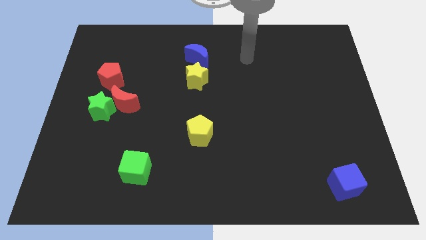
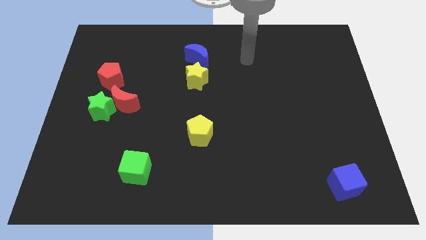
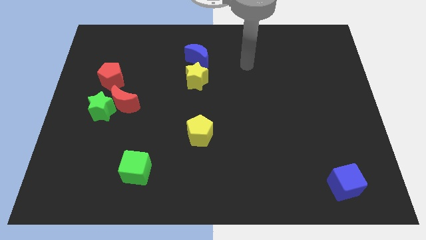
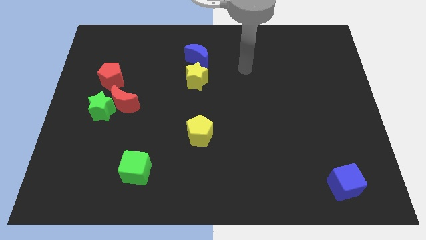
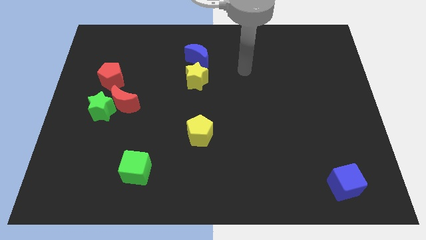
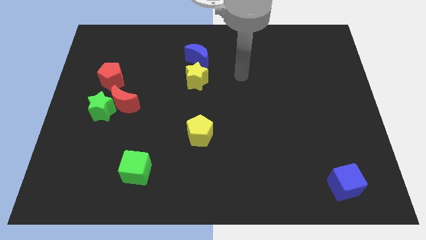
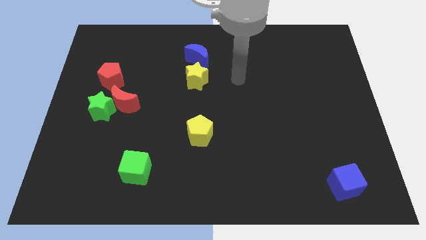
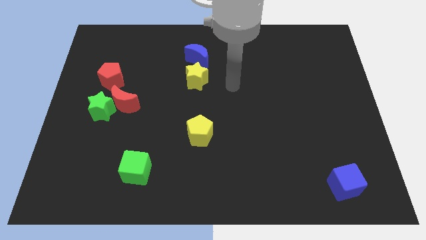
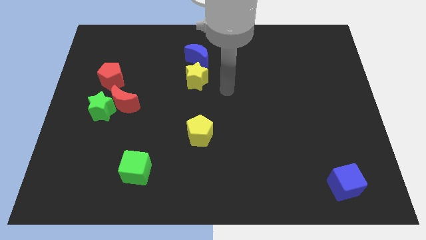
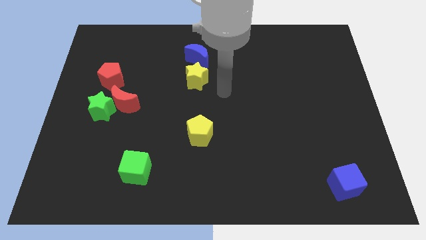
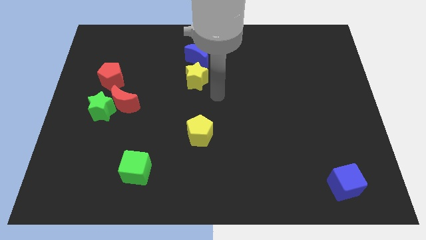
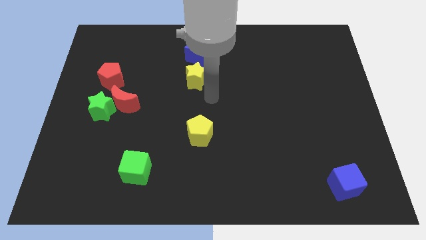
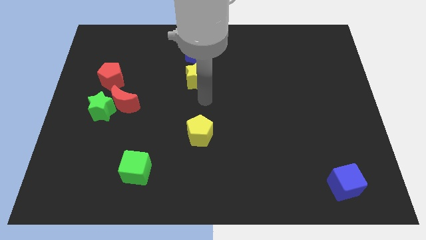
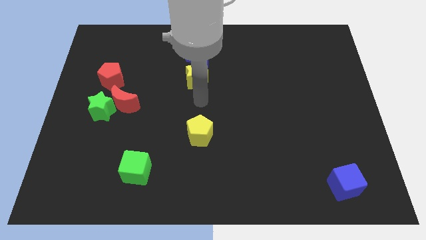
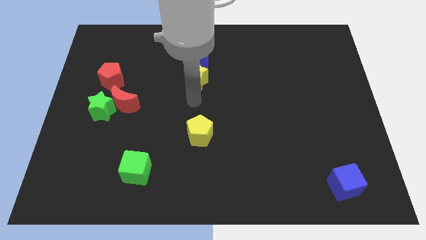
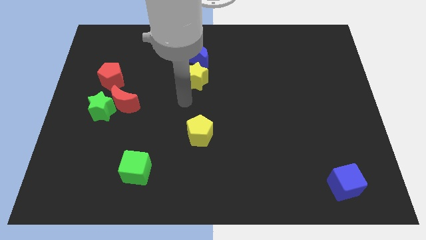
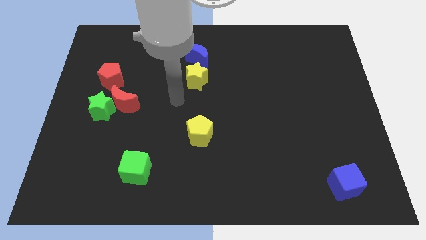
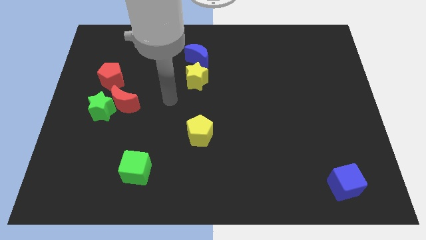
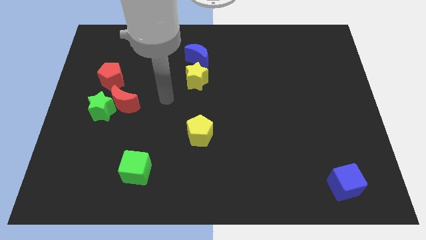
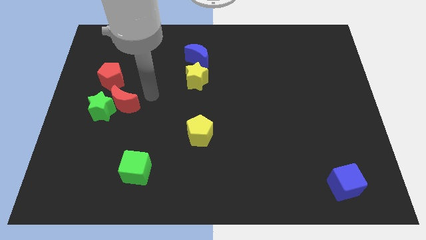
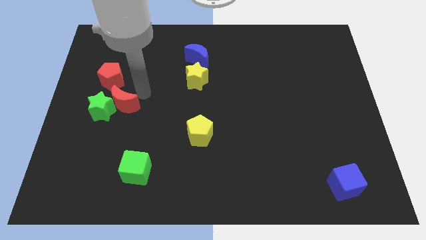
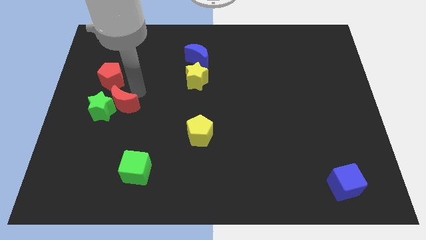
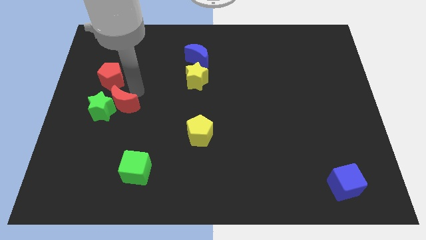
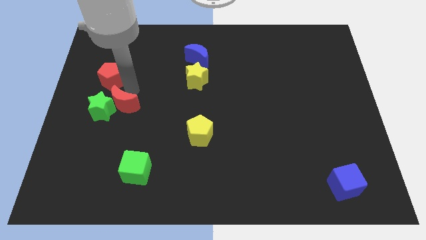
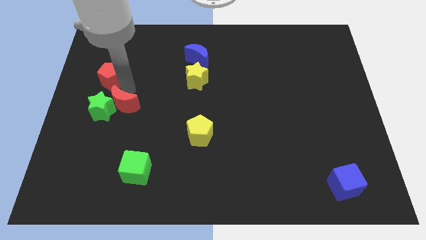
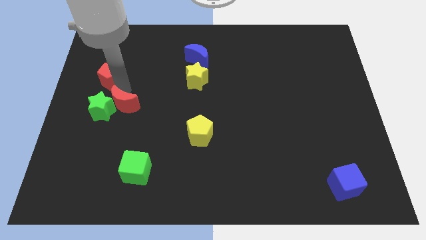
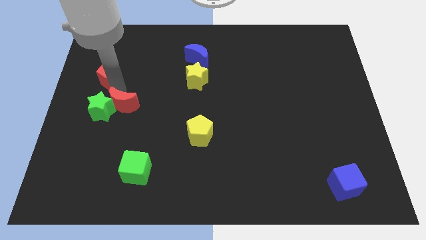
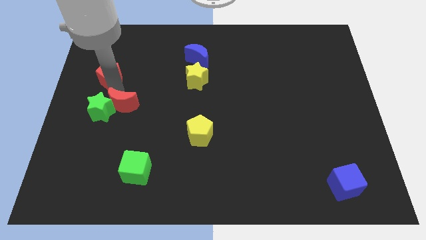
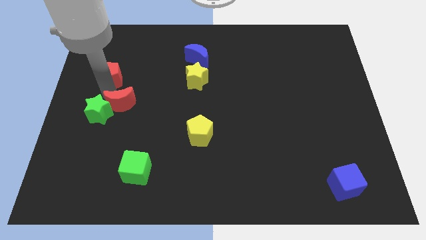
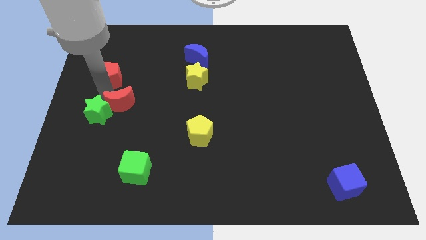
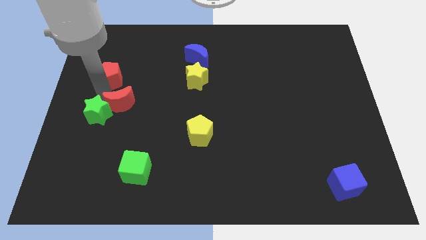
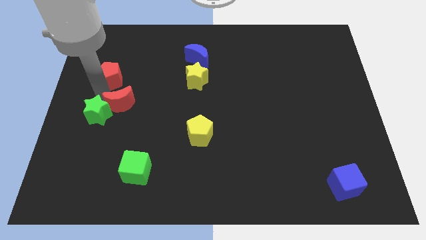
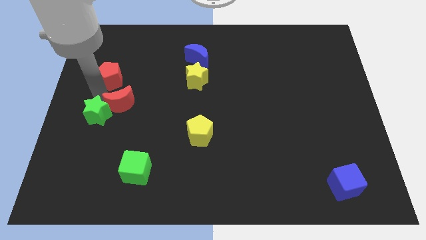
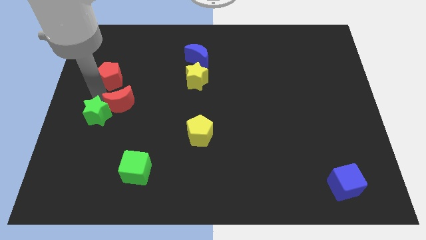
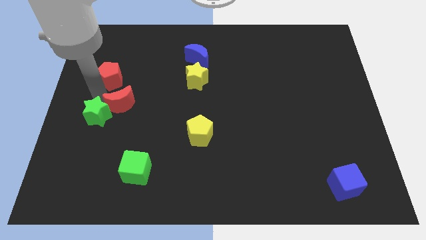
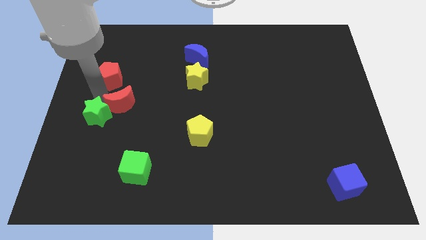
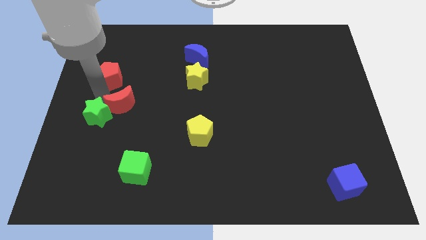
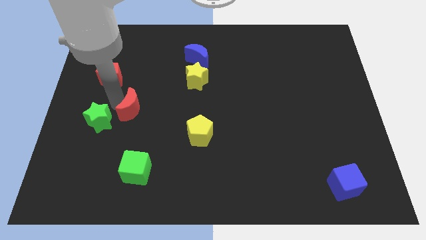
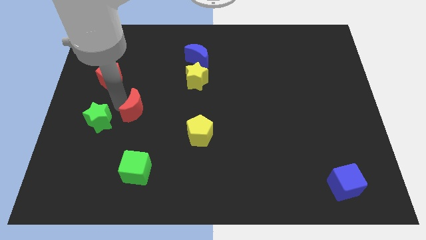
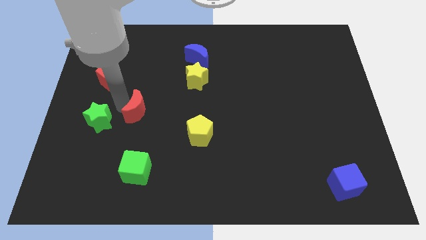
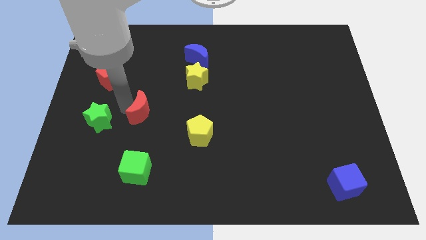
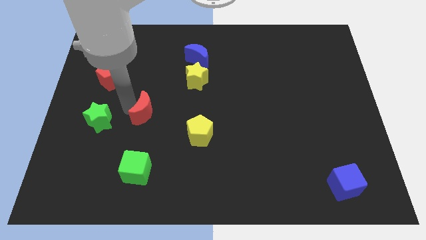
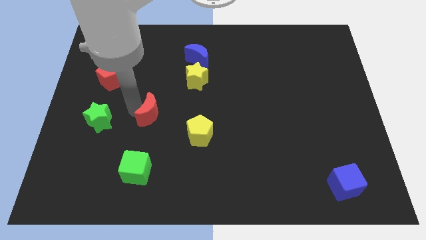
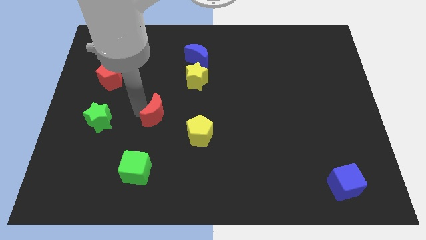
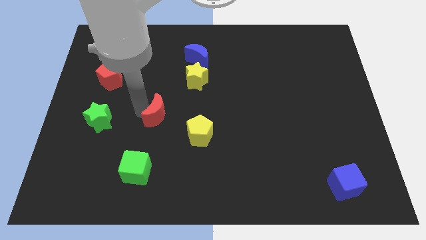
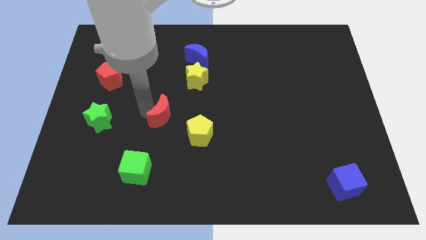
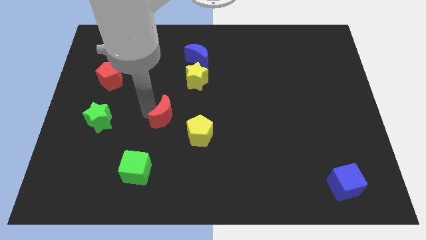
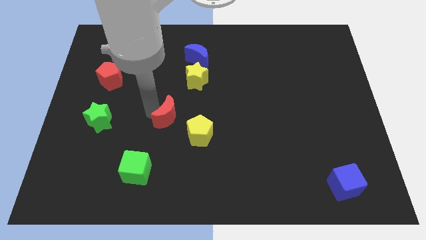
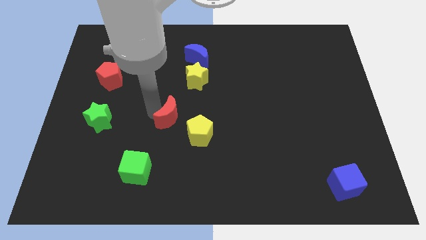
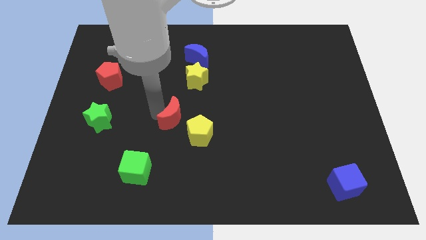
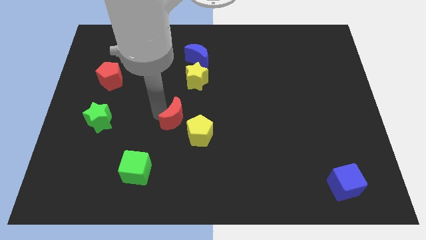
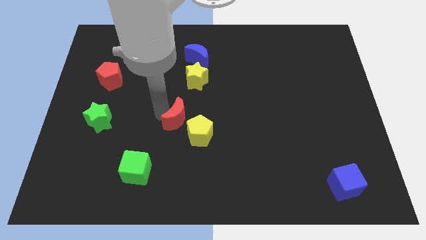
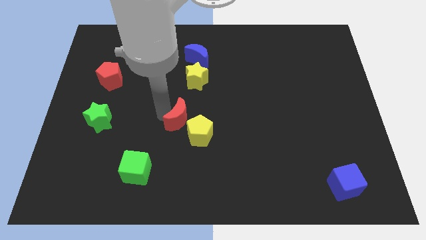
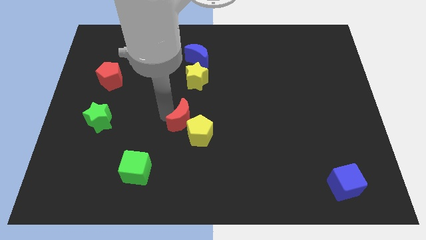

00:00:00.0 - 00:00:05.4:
slide the red moon towards the yellow pentagon

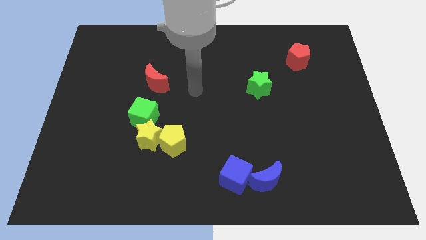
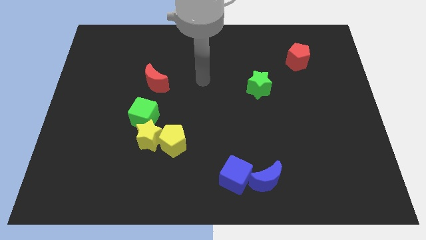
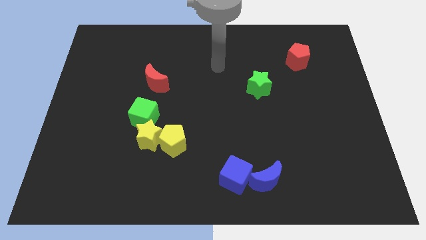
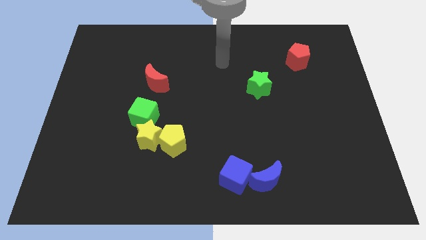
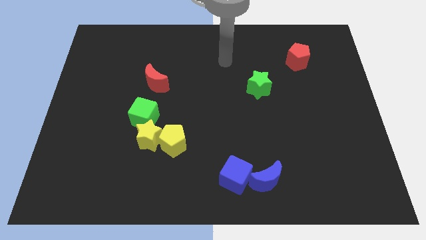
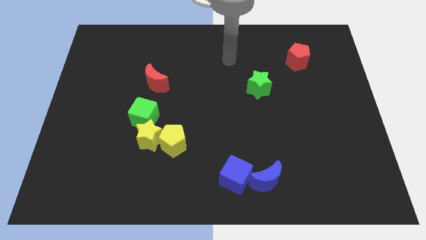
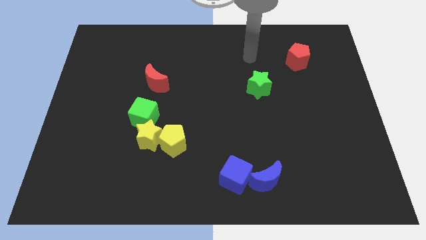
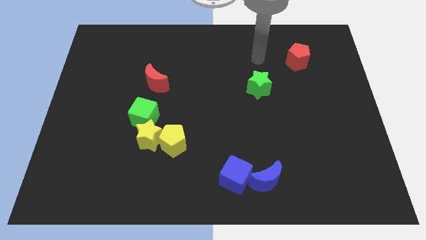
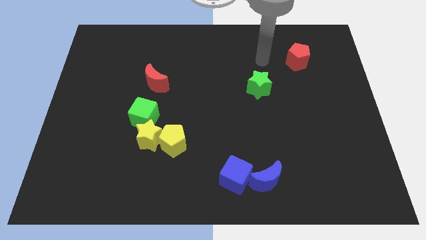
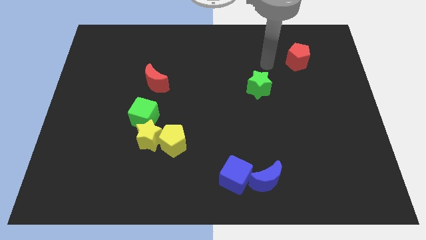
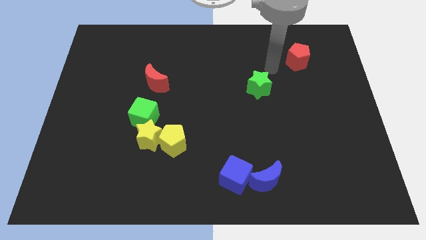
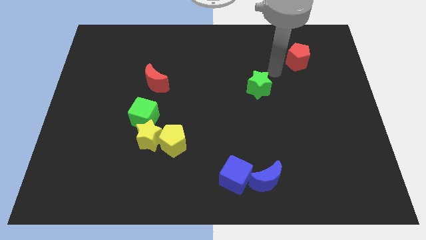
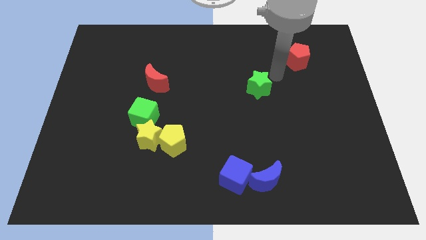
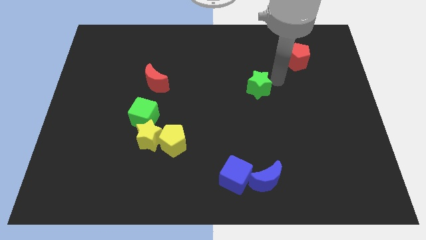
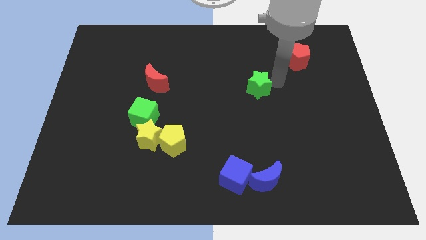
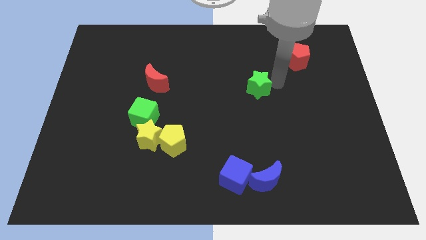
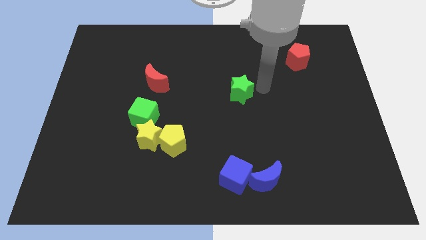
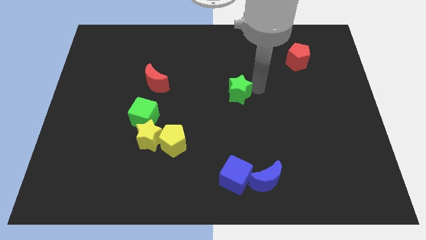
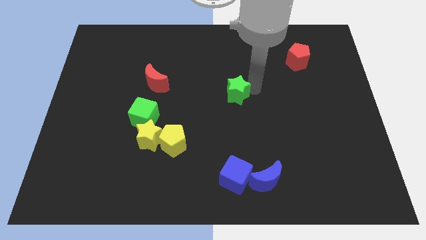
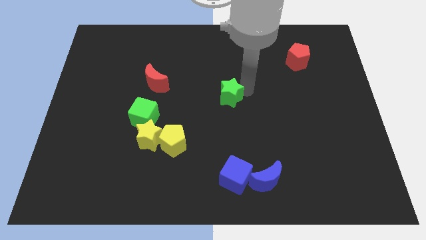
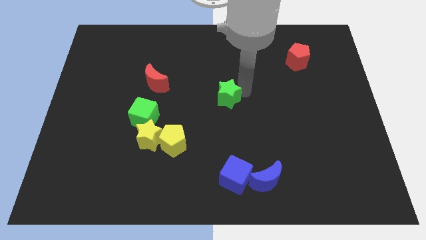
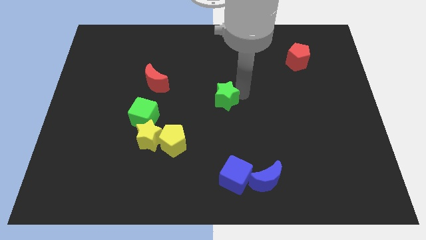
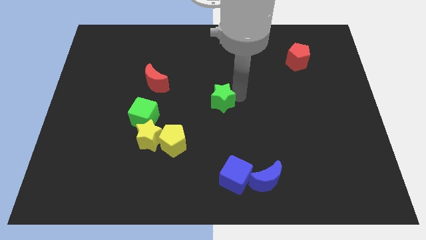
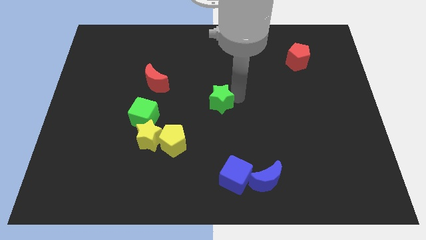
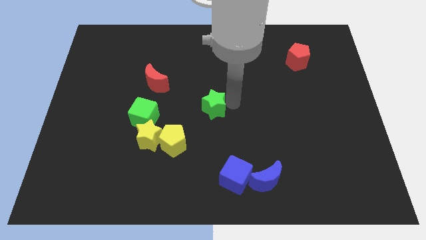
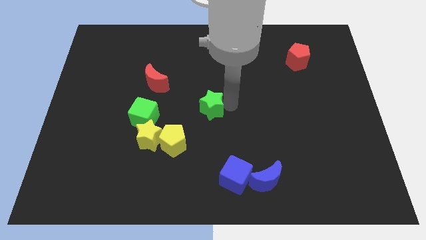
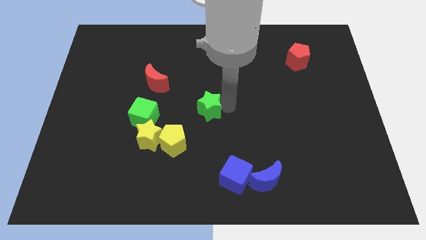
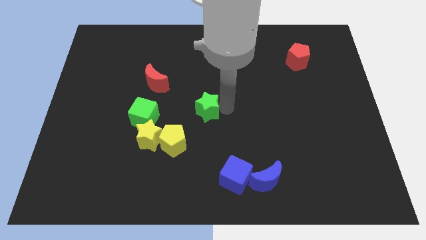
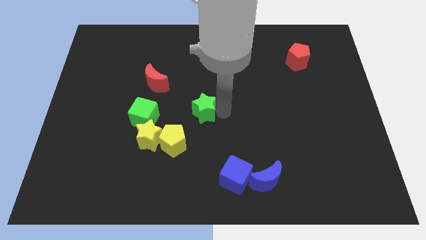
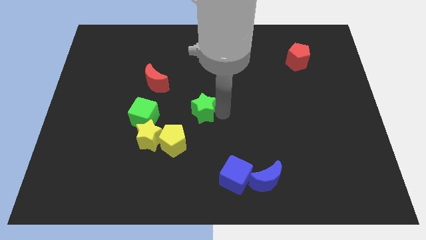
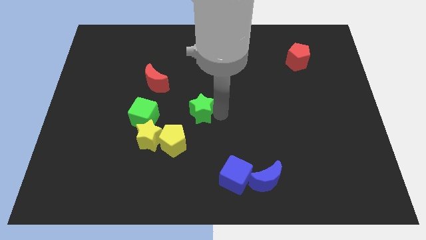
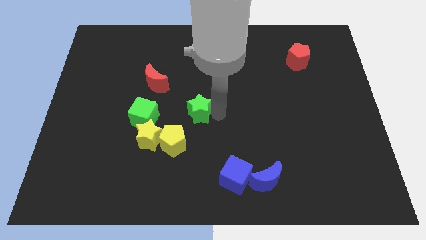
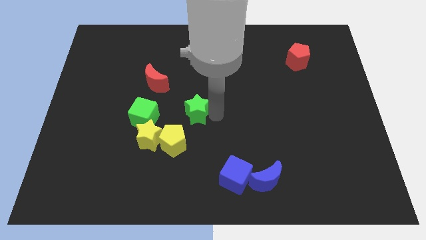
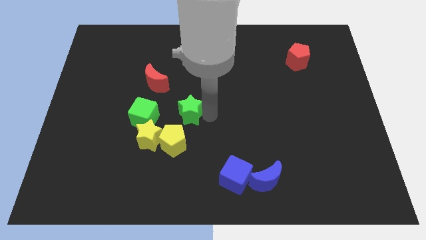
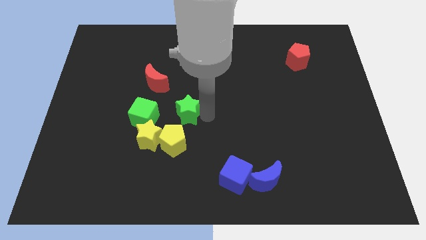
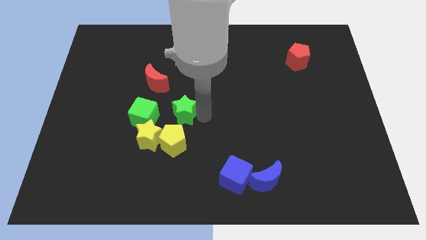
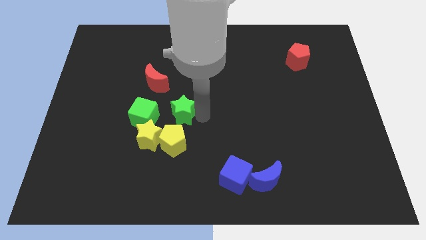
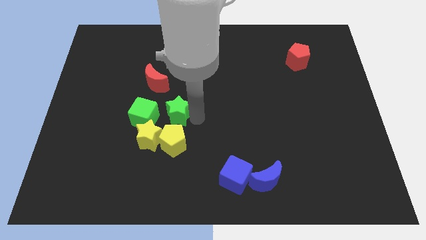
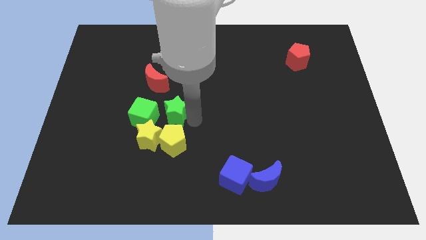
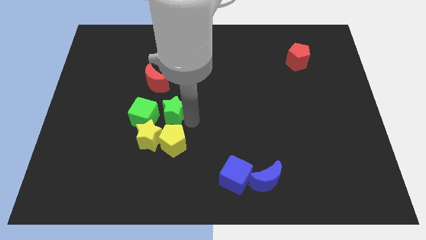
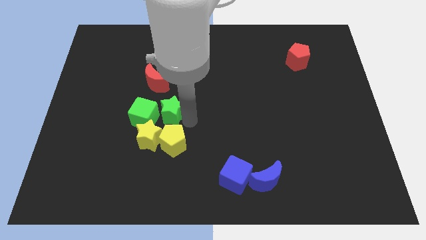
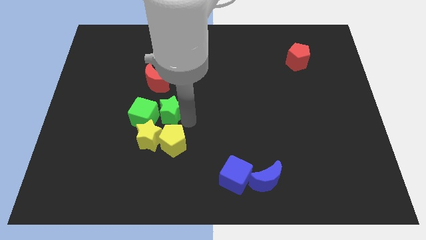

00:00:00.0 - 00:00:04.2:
move the green star next to the green cube
